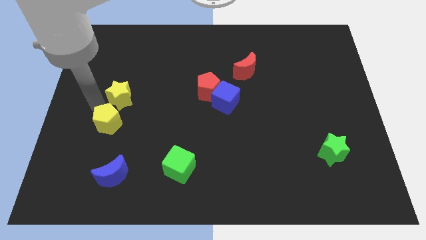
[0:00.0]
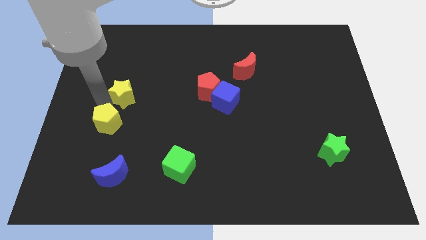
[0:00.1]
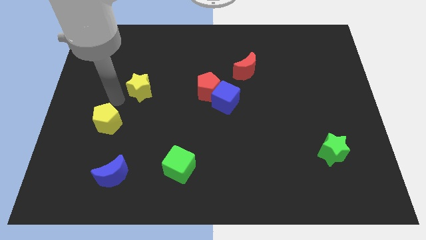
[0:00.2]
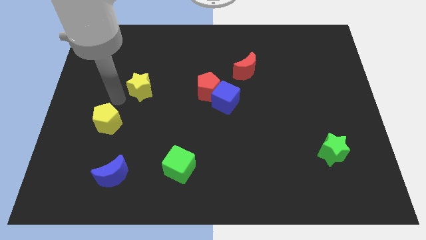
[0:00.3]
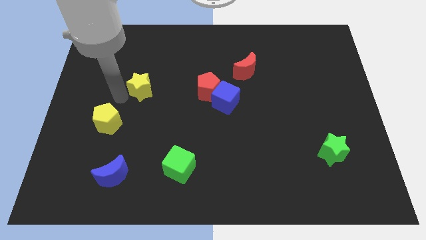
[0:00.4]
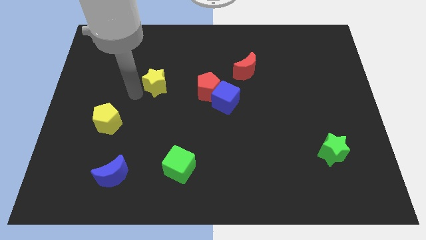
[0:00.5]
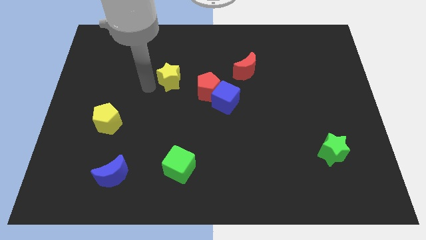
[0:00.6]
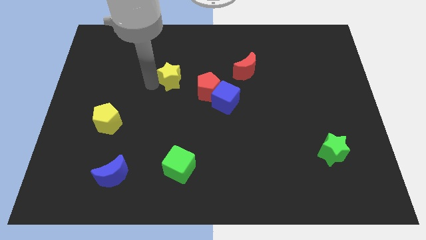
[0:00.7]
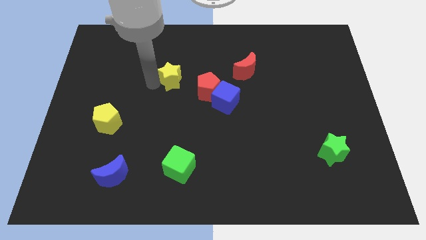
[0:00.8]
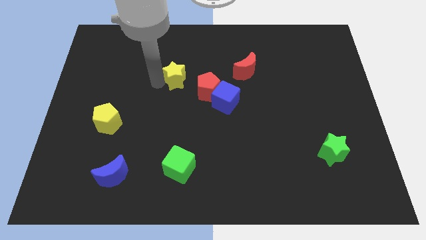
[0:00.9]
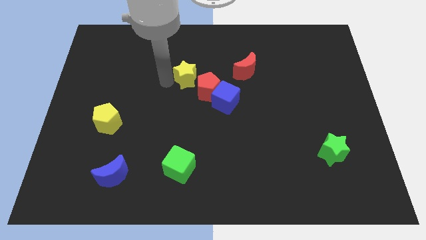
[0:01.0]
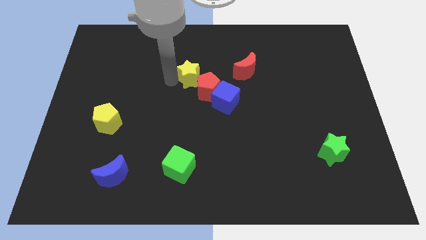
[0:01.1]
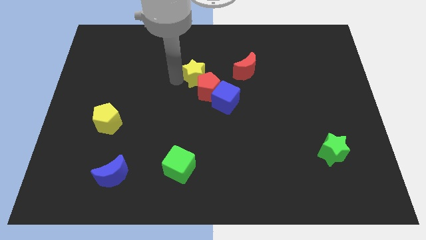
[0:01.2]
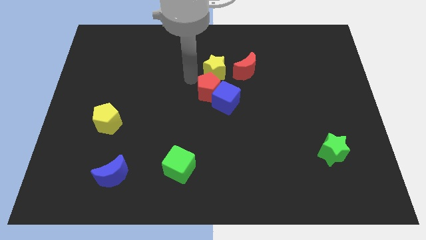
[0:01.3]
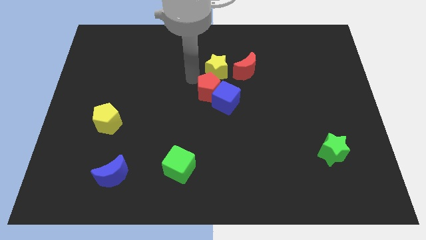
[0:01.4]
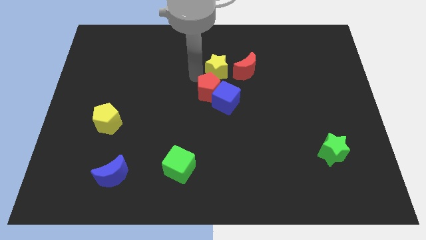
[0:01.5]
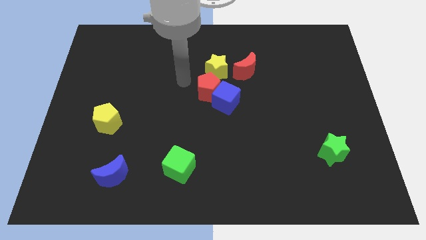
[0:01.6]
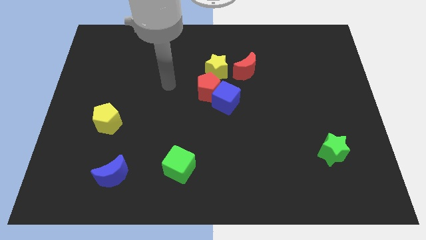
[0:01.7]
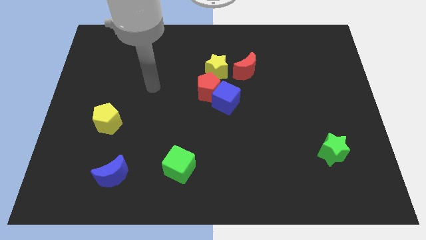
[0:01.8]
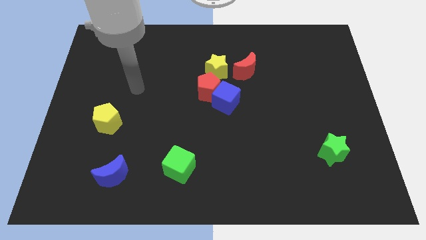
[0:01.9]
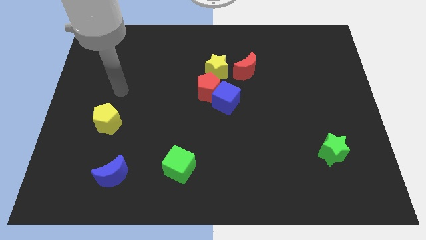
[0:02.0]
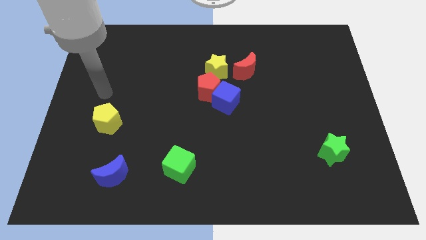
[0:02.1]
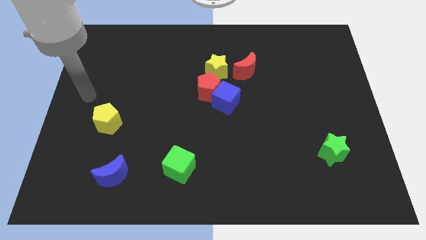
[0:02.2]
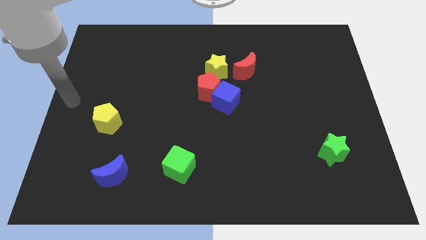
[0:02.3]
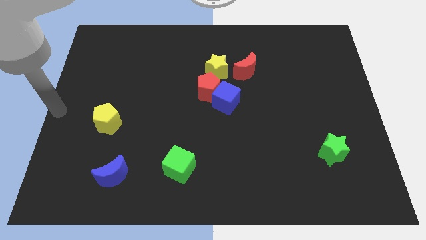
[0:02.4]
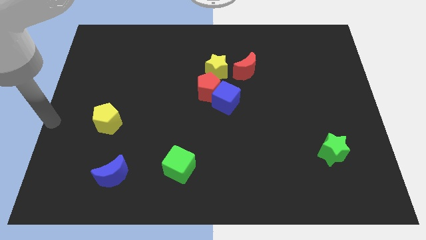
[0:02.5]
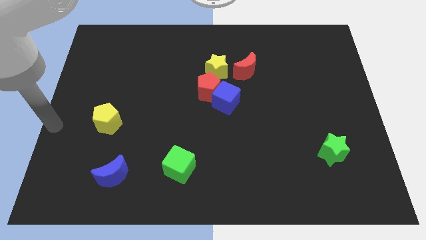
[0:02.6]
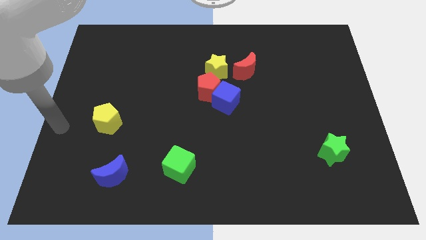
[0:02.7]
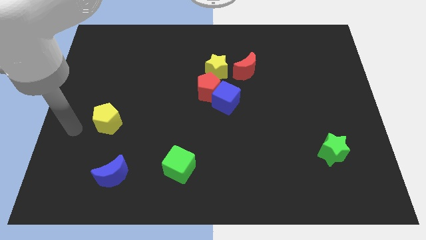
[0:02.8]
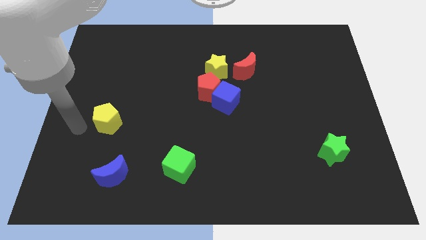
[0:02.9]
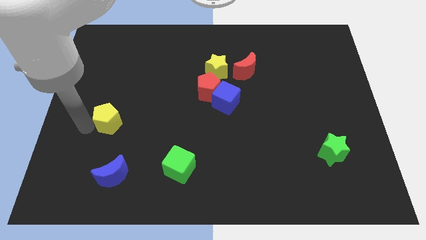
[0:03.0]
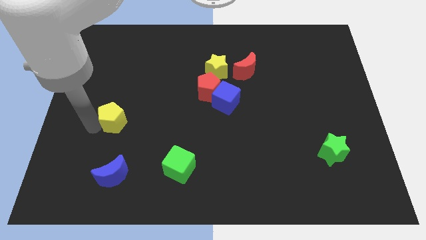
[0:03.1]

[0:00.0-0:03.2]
push the yellow star towards the red crescent

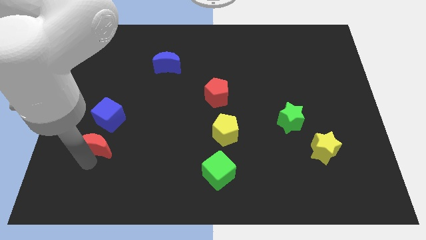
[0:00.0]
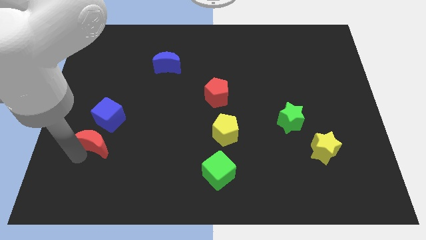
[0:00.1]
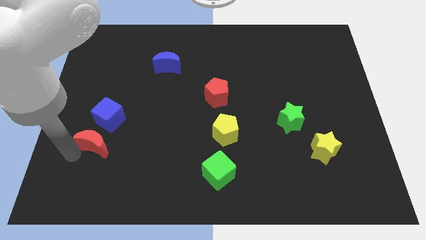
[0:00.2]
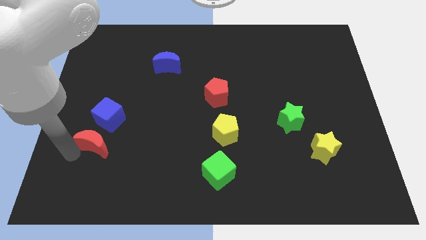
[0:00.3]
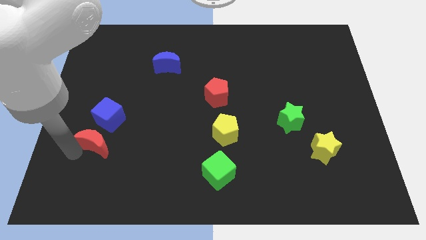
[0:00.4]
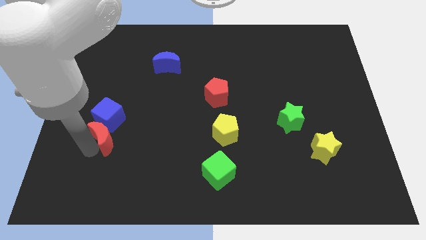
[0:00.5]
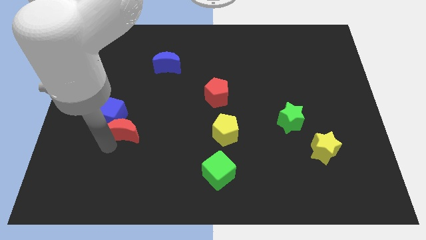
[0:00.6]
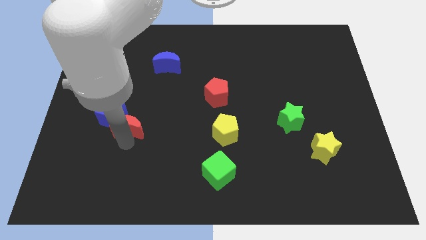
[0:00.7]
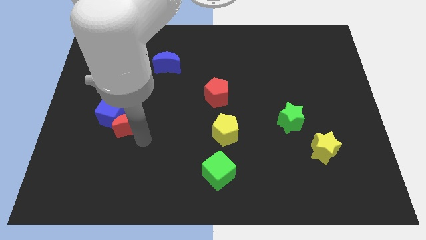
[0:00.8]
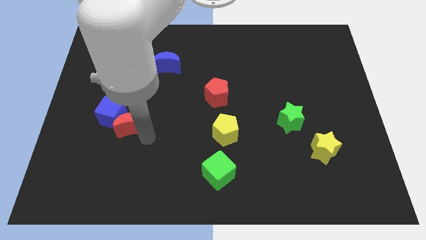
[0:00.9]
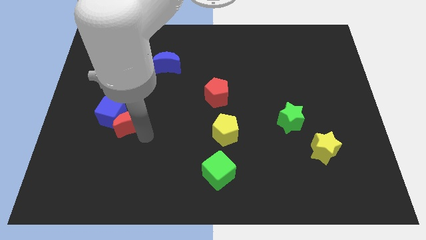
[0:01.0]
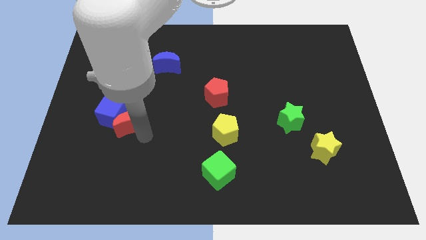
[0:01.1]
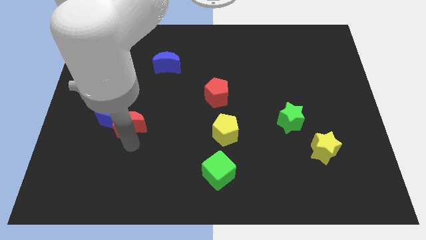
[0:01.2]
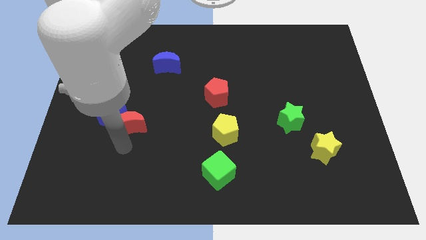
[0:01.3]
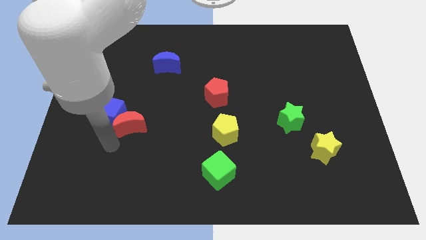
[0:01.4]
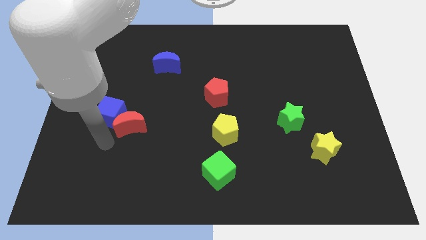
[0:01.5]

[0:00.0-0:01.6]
push the red crescent into the blue cube

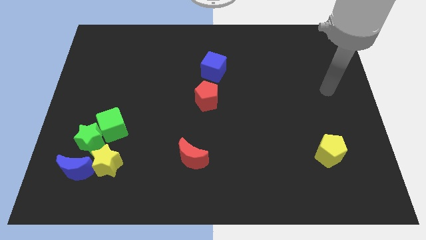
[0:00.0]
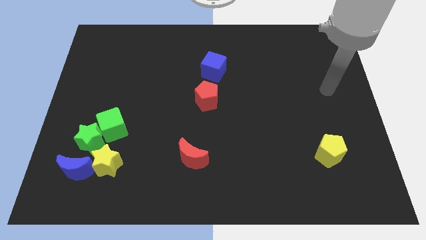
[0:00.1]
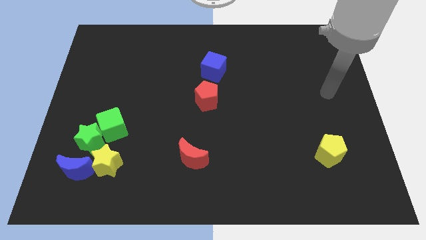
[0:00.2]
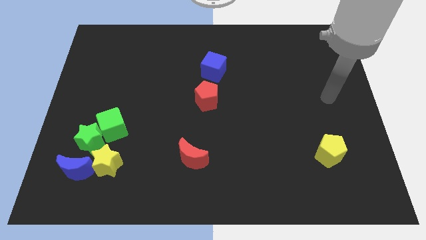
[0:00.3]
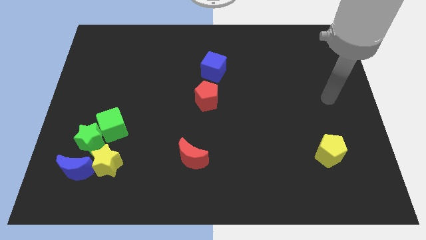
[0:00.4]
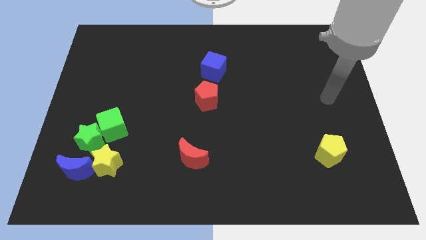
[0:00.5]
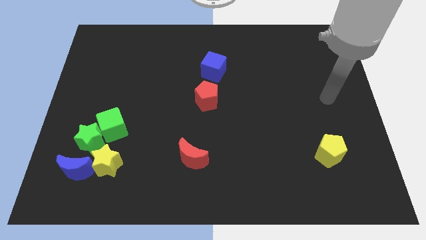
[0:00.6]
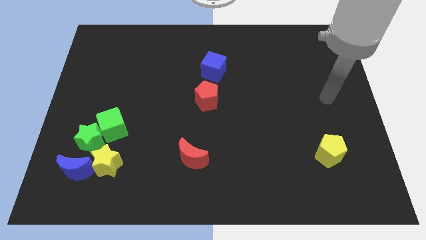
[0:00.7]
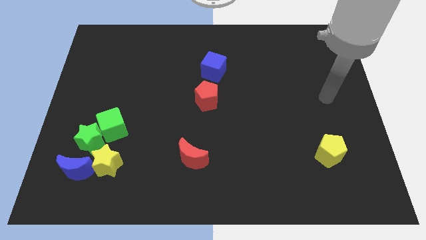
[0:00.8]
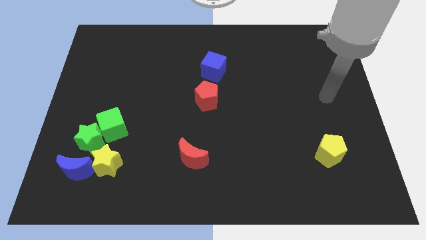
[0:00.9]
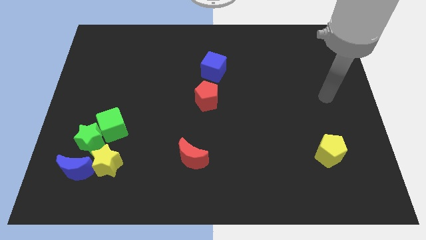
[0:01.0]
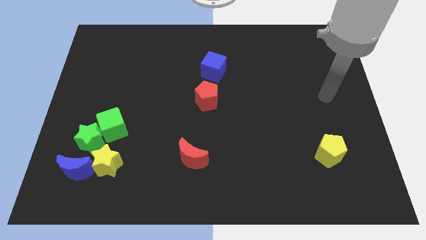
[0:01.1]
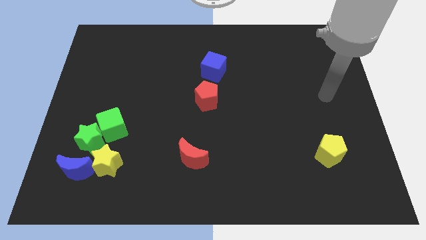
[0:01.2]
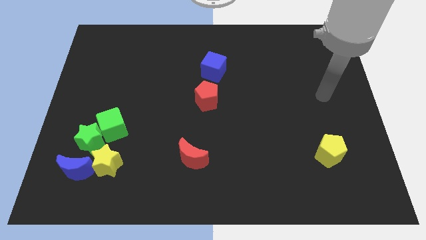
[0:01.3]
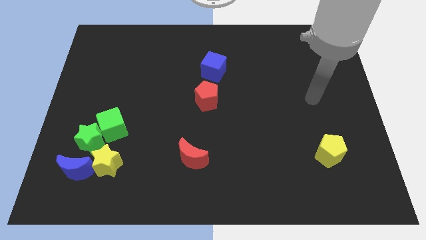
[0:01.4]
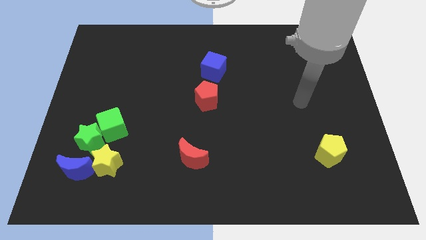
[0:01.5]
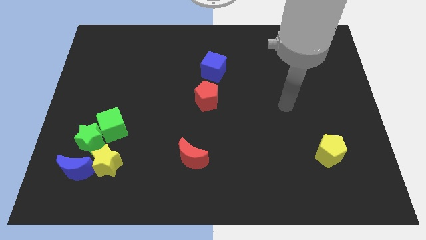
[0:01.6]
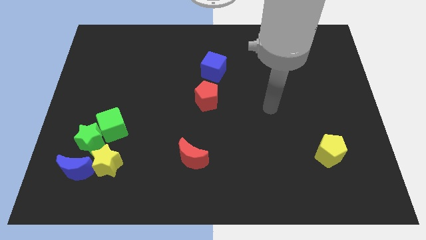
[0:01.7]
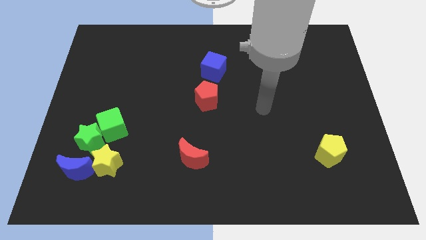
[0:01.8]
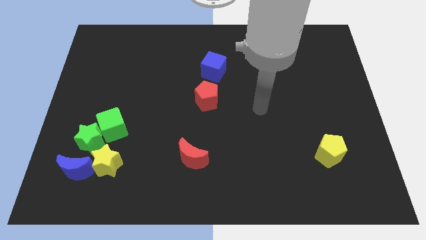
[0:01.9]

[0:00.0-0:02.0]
move your arm towards the center of the board

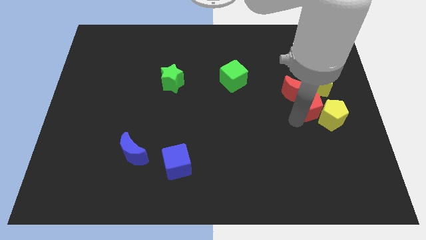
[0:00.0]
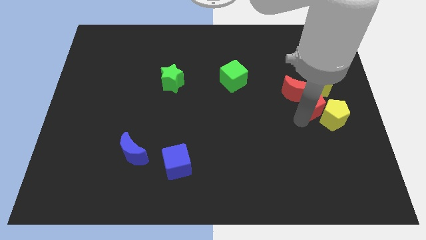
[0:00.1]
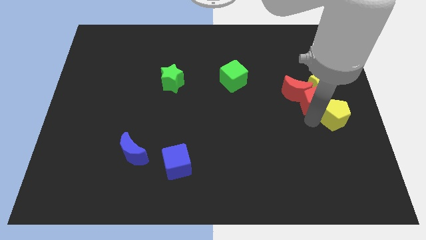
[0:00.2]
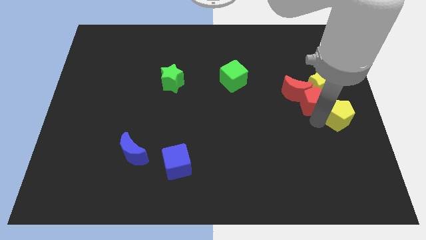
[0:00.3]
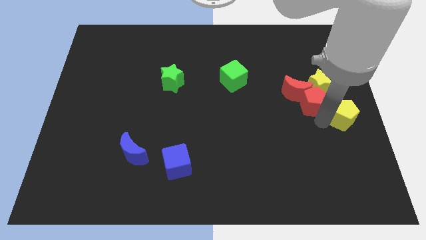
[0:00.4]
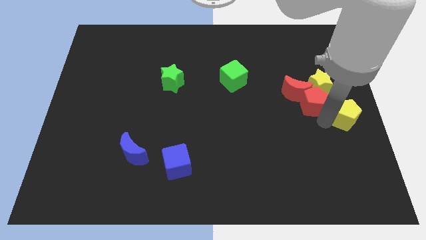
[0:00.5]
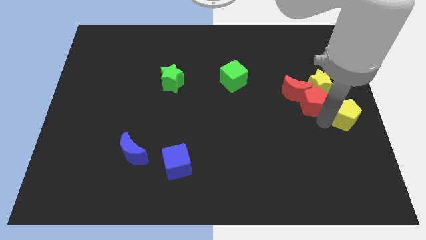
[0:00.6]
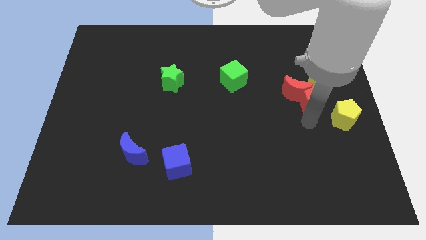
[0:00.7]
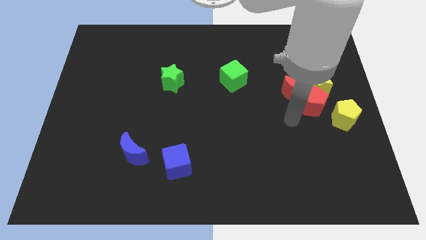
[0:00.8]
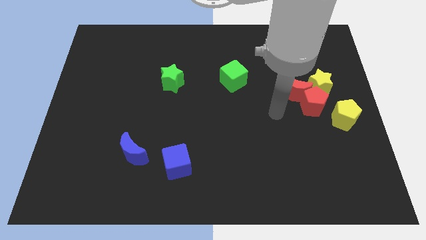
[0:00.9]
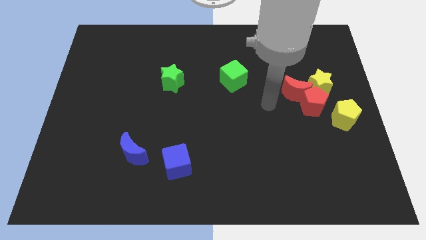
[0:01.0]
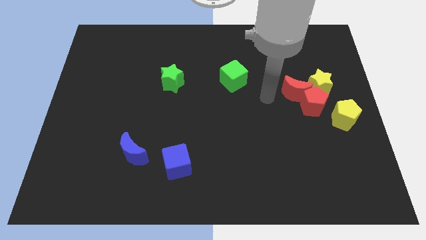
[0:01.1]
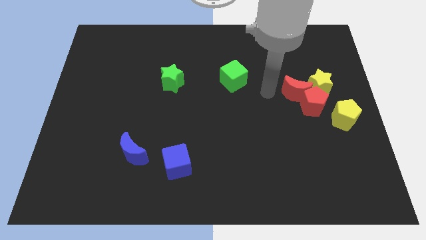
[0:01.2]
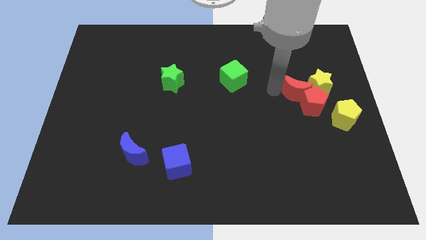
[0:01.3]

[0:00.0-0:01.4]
separate red pentagon and yellow pentagon

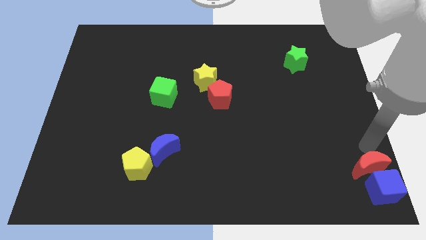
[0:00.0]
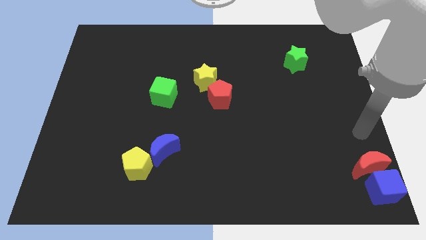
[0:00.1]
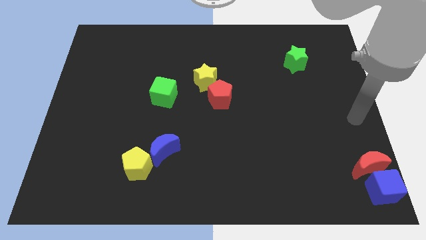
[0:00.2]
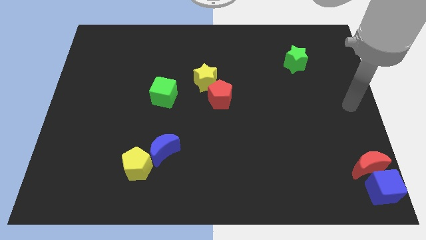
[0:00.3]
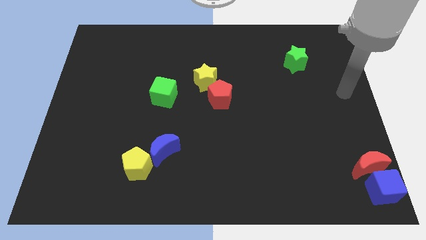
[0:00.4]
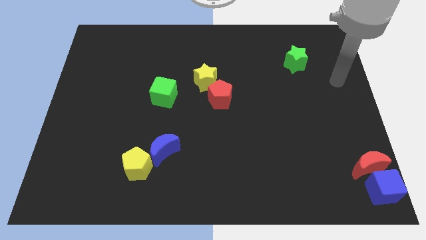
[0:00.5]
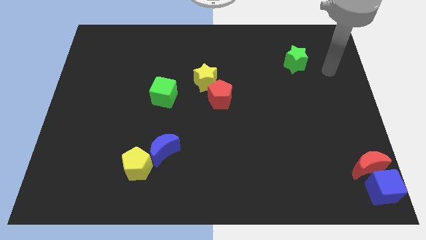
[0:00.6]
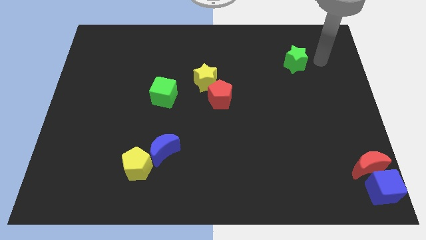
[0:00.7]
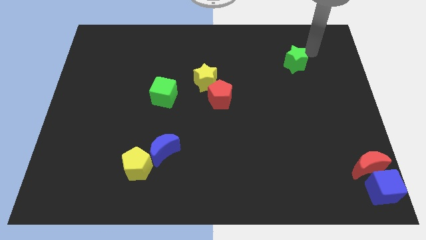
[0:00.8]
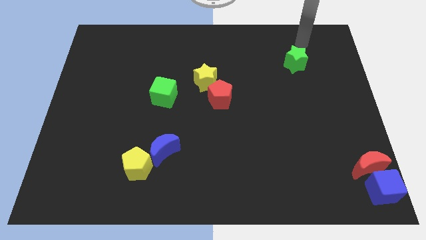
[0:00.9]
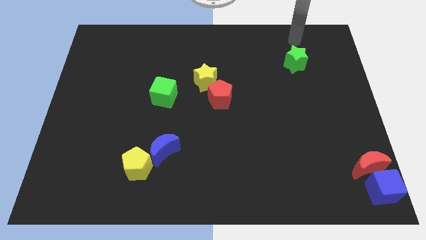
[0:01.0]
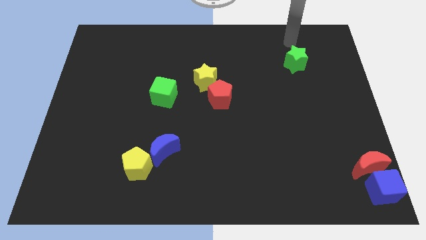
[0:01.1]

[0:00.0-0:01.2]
place the arm to the top of the green star
